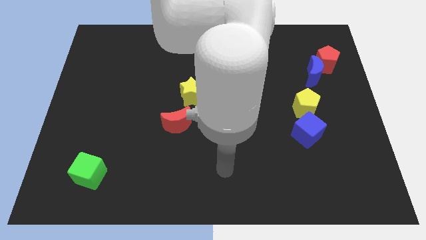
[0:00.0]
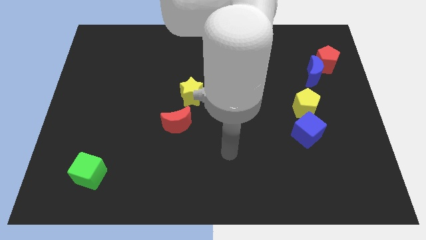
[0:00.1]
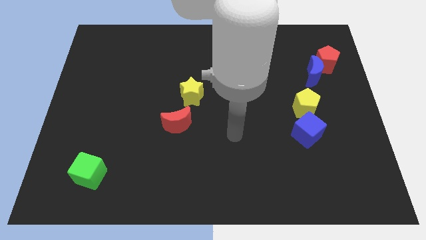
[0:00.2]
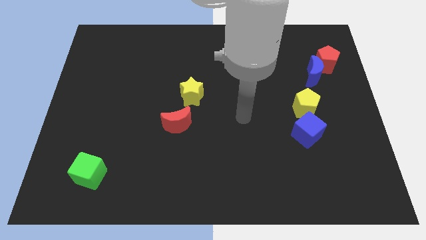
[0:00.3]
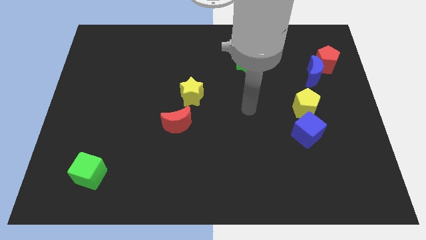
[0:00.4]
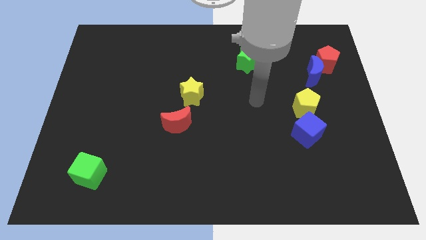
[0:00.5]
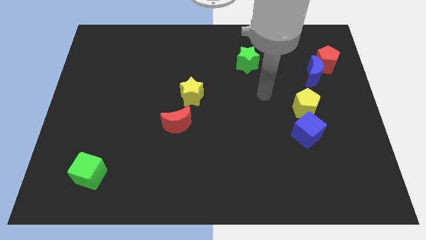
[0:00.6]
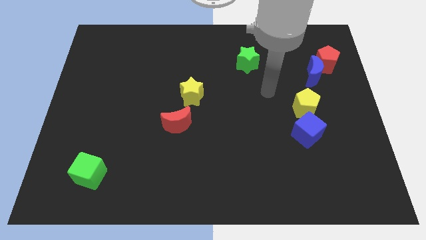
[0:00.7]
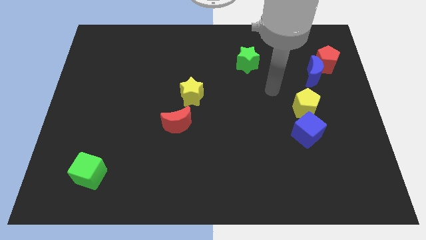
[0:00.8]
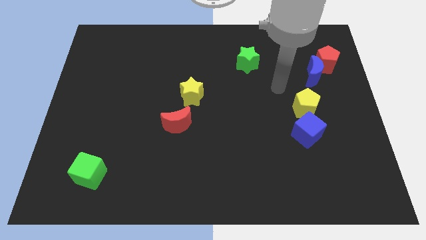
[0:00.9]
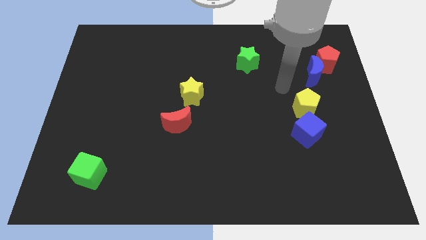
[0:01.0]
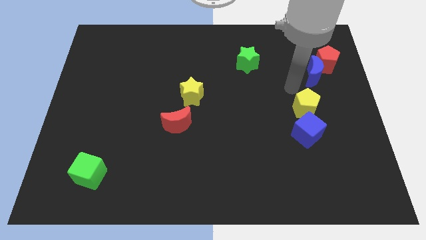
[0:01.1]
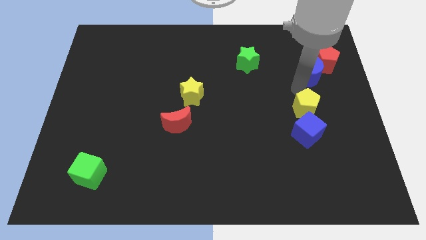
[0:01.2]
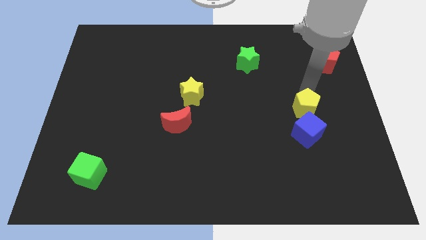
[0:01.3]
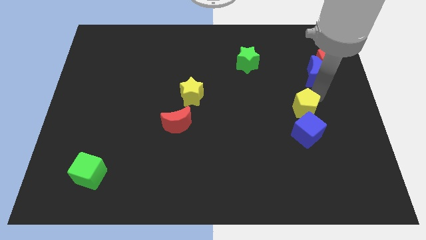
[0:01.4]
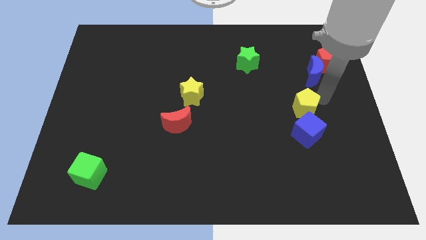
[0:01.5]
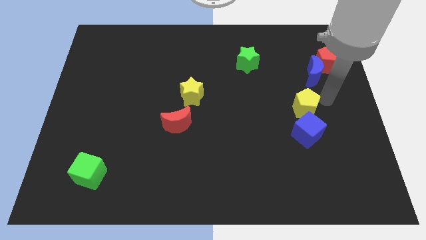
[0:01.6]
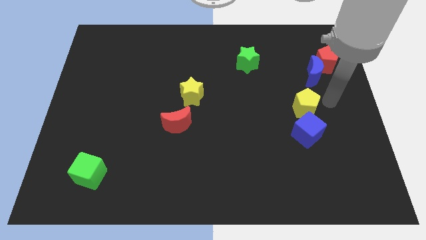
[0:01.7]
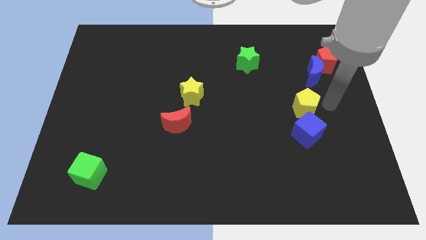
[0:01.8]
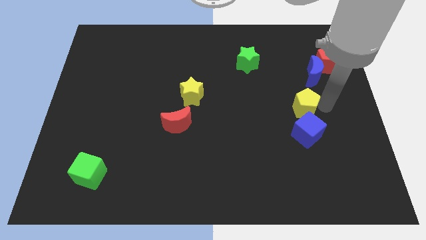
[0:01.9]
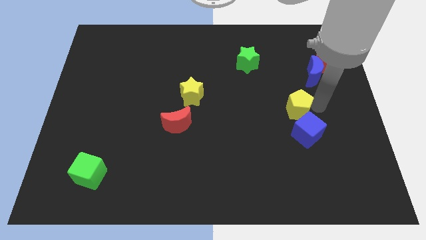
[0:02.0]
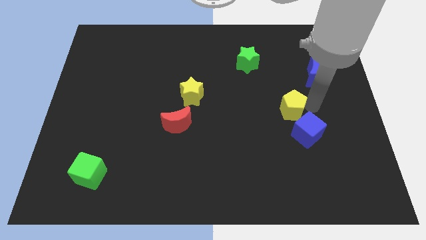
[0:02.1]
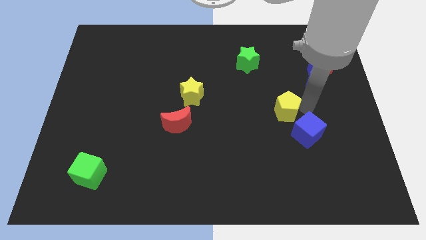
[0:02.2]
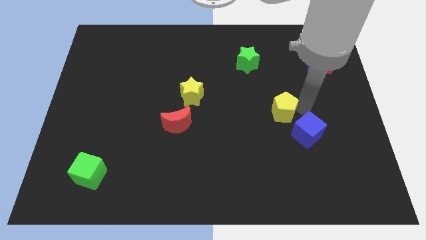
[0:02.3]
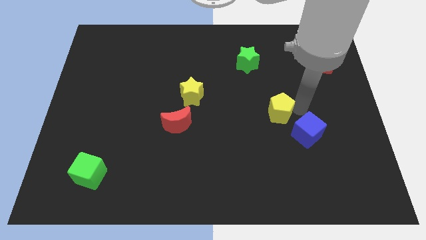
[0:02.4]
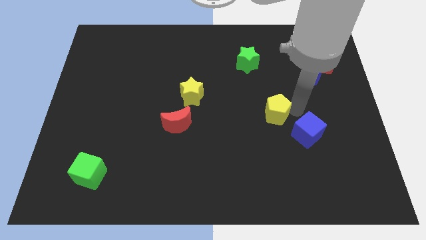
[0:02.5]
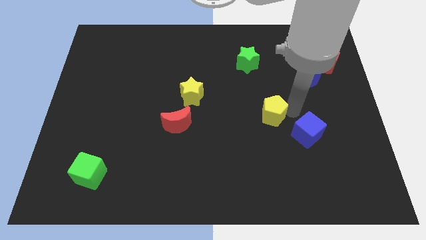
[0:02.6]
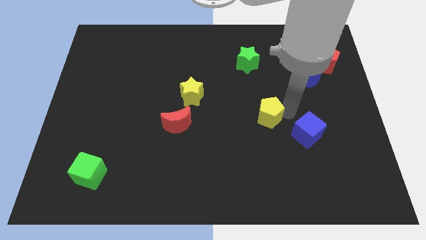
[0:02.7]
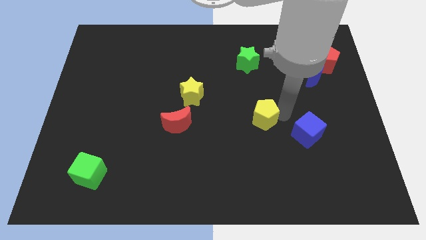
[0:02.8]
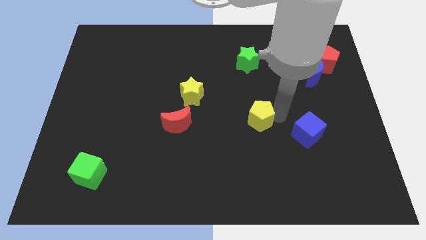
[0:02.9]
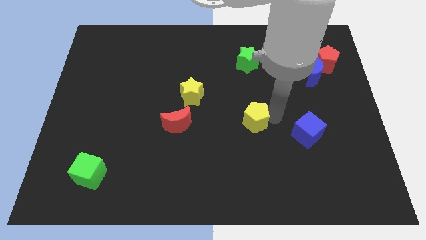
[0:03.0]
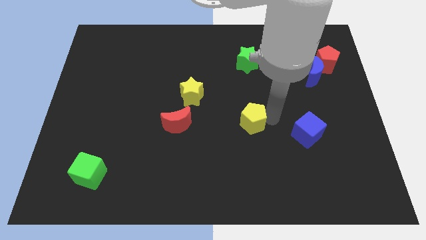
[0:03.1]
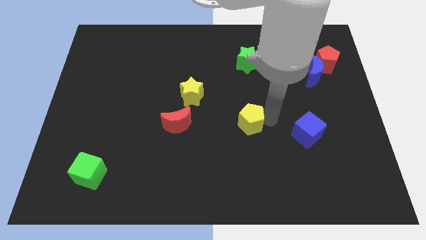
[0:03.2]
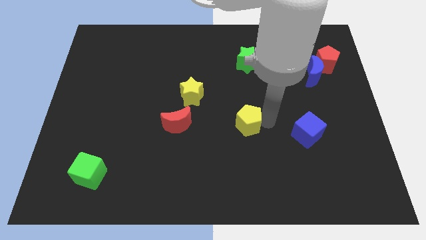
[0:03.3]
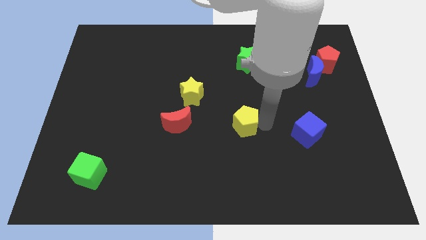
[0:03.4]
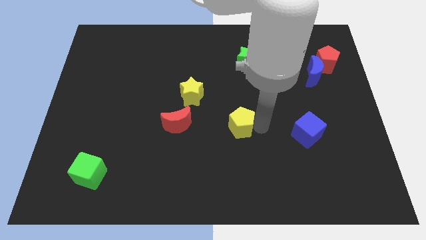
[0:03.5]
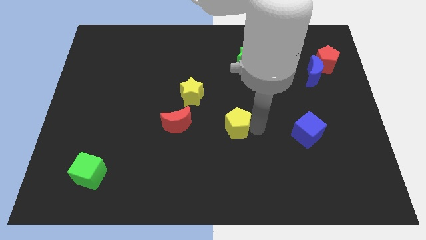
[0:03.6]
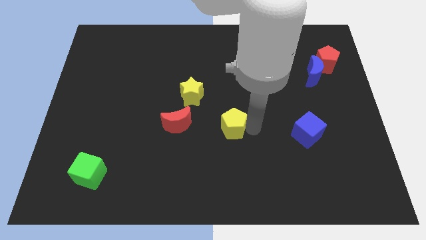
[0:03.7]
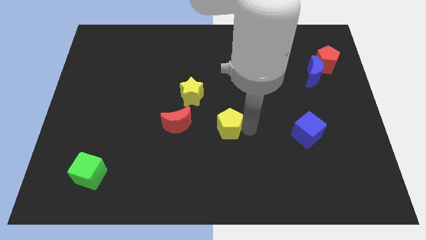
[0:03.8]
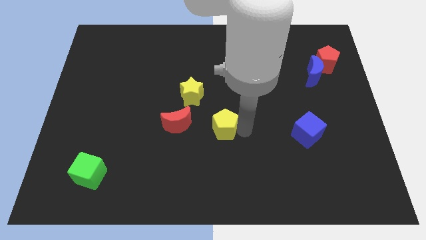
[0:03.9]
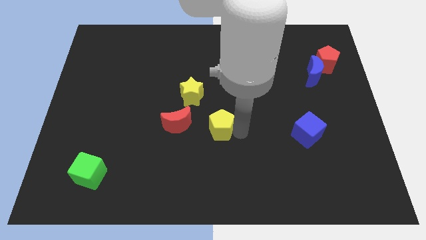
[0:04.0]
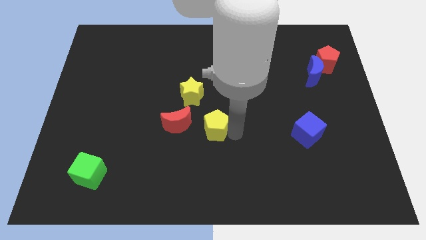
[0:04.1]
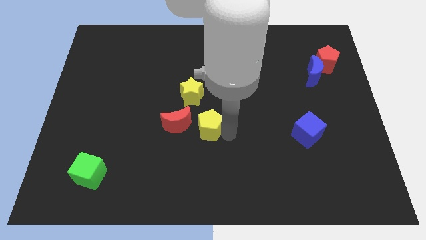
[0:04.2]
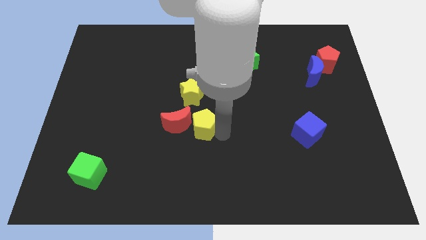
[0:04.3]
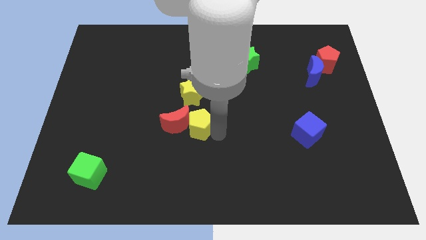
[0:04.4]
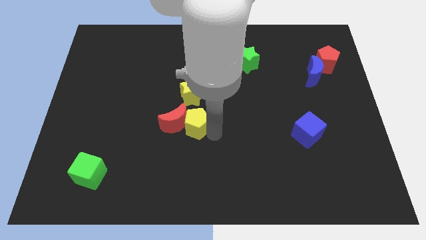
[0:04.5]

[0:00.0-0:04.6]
move the yellow pentagon next to the red moon

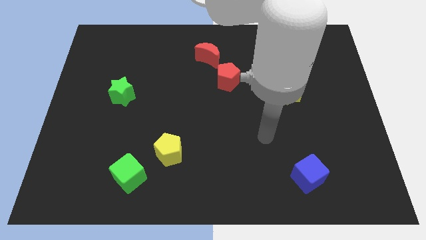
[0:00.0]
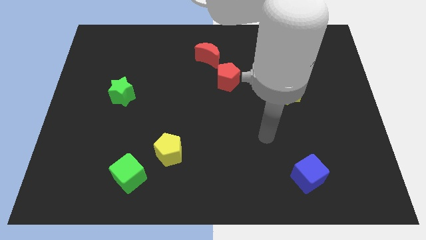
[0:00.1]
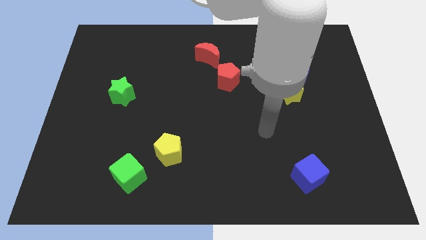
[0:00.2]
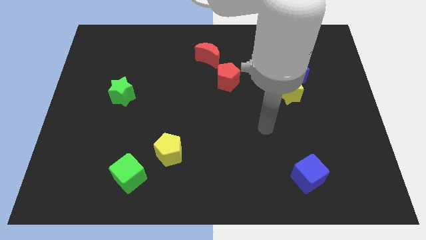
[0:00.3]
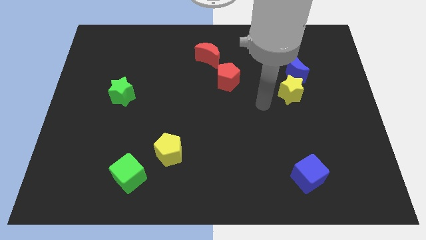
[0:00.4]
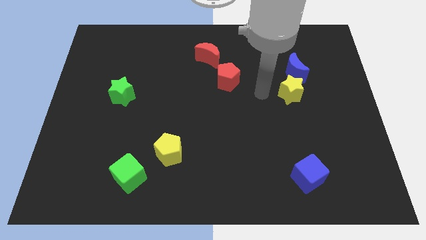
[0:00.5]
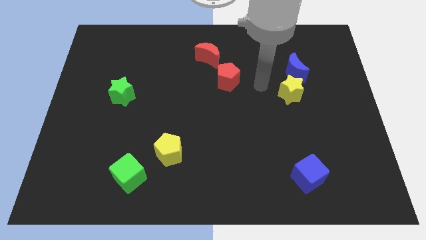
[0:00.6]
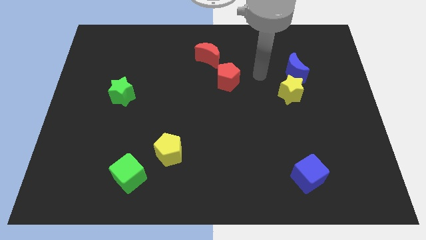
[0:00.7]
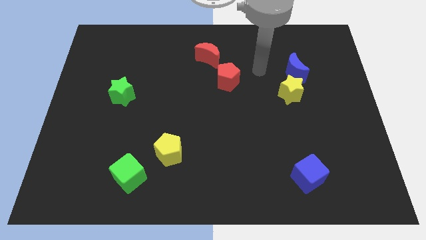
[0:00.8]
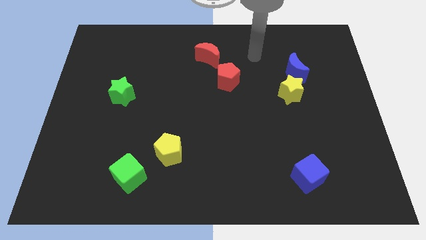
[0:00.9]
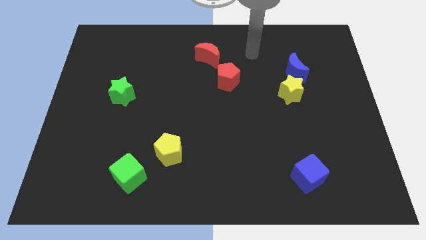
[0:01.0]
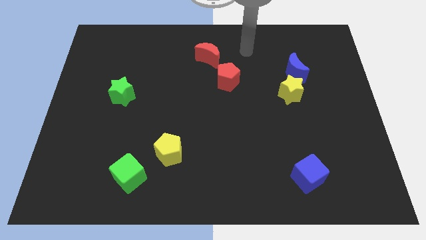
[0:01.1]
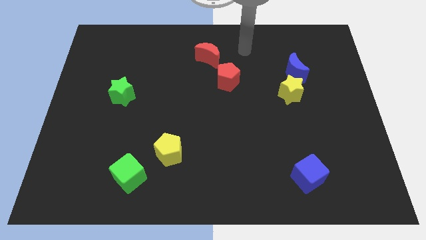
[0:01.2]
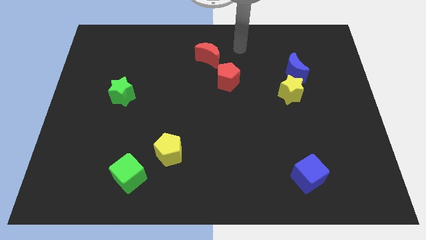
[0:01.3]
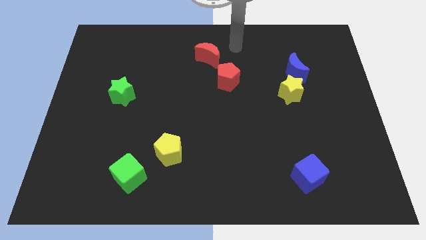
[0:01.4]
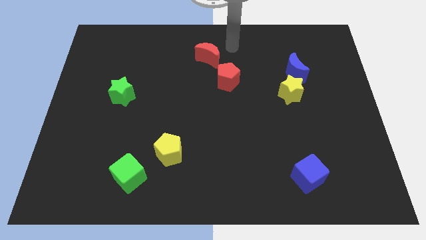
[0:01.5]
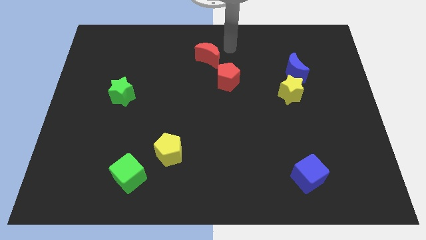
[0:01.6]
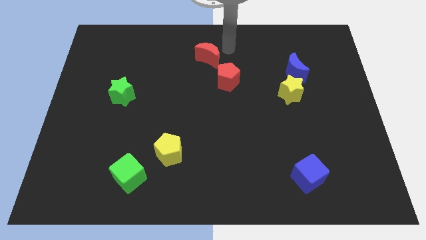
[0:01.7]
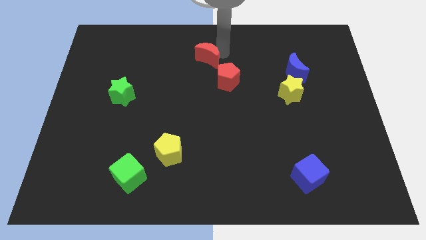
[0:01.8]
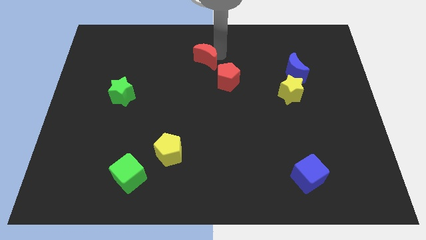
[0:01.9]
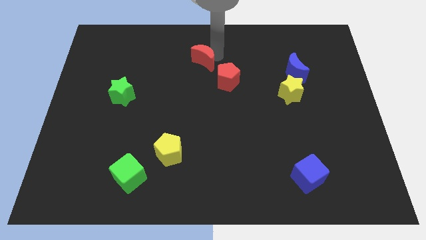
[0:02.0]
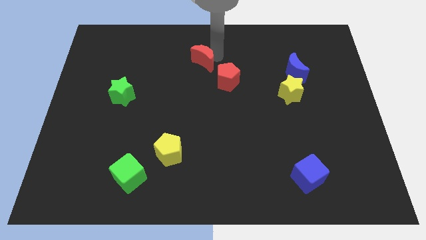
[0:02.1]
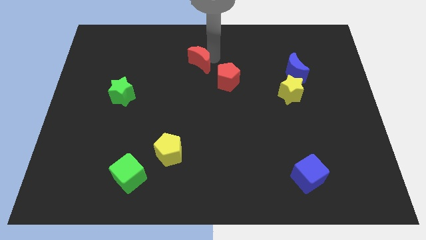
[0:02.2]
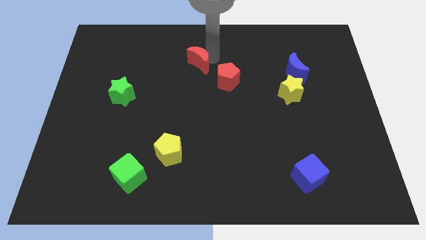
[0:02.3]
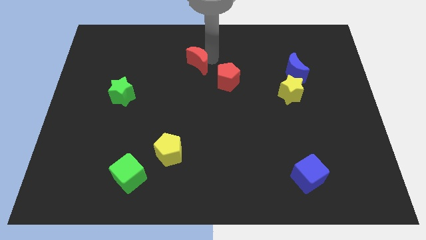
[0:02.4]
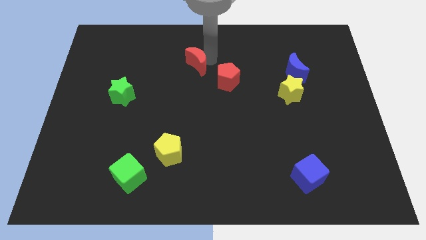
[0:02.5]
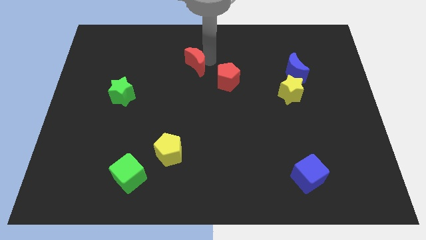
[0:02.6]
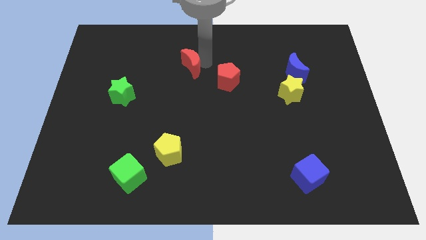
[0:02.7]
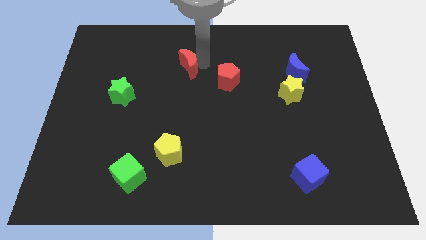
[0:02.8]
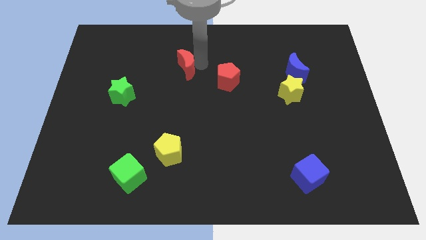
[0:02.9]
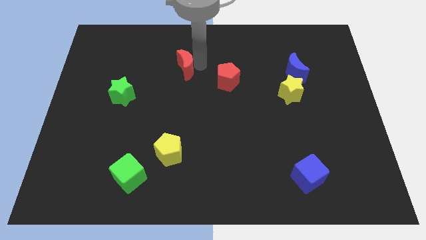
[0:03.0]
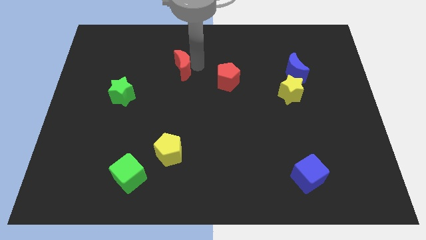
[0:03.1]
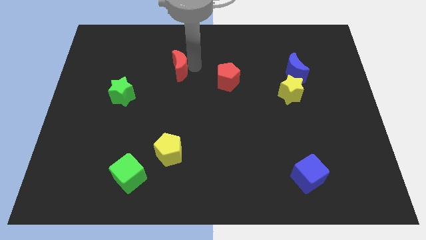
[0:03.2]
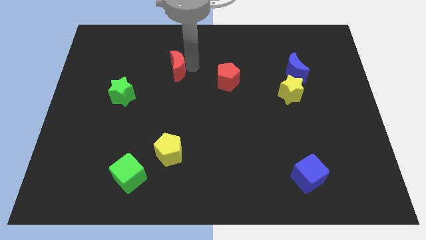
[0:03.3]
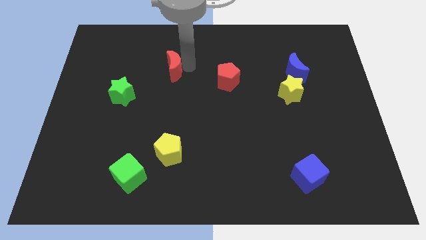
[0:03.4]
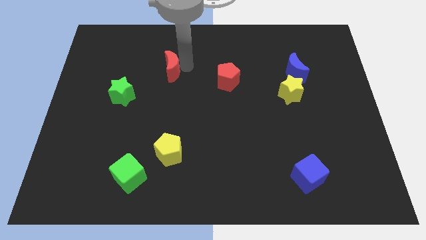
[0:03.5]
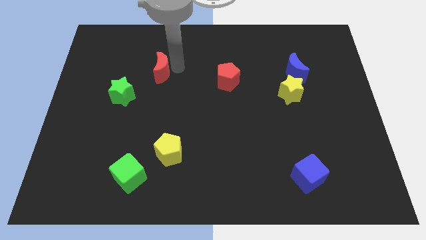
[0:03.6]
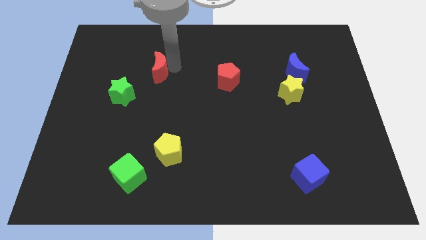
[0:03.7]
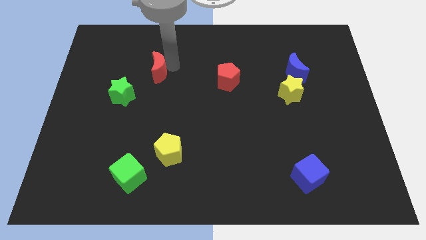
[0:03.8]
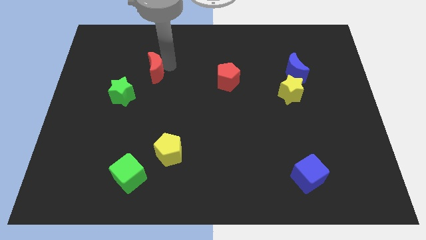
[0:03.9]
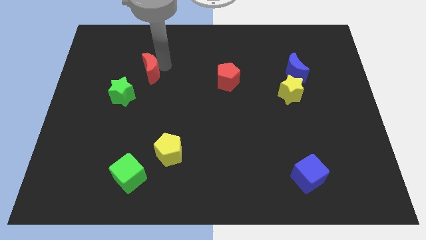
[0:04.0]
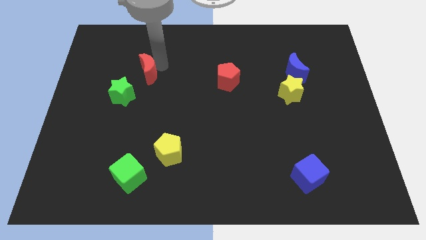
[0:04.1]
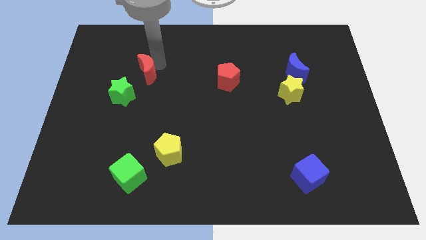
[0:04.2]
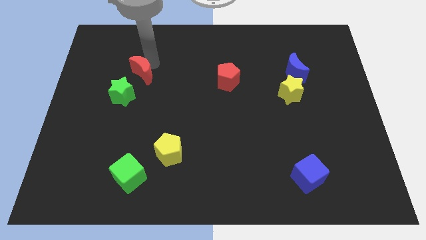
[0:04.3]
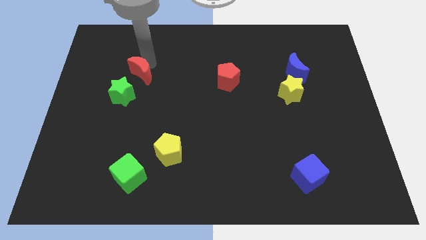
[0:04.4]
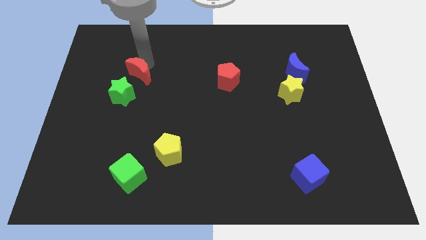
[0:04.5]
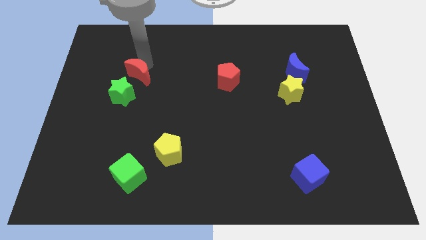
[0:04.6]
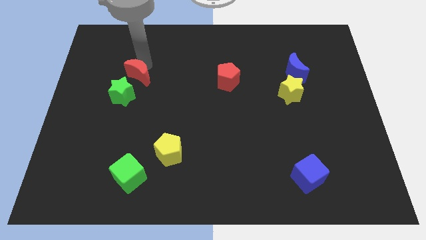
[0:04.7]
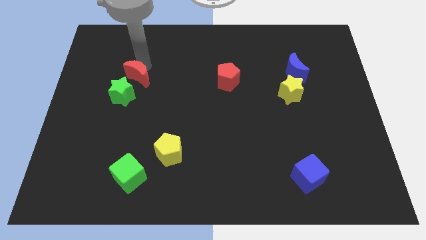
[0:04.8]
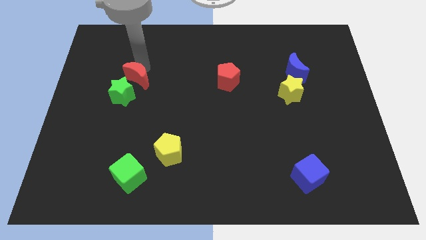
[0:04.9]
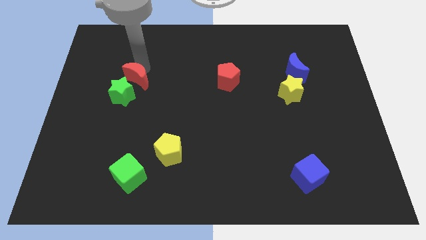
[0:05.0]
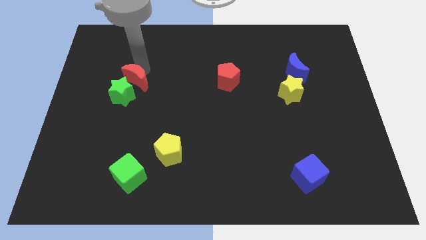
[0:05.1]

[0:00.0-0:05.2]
put the red moon to the green star
